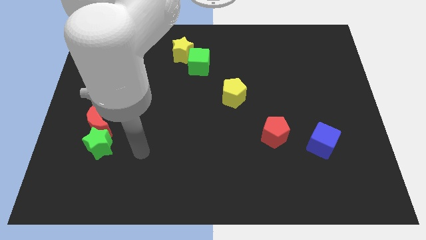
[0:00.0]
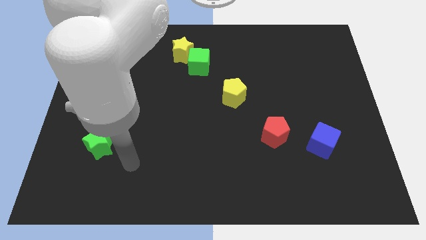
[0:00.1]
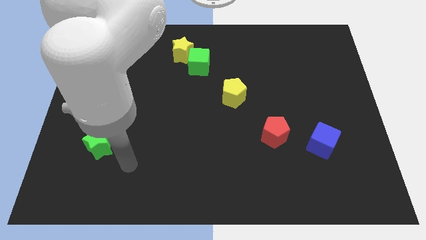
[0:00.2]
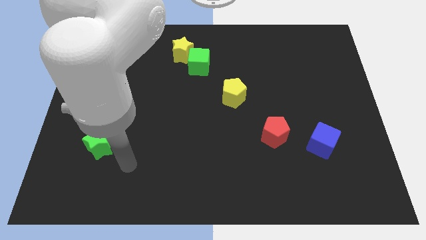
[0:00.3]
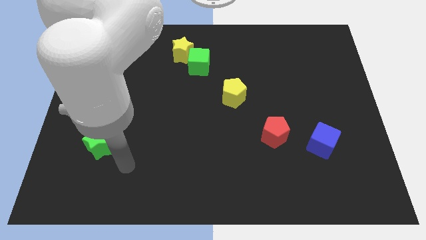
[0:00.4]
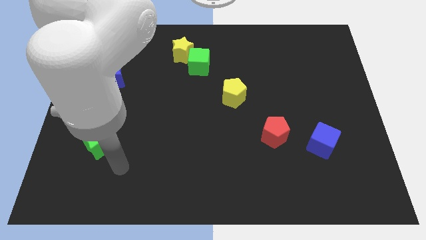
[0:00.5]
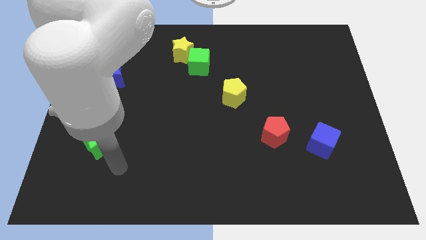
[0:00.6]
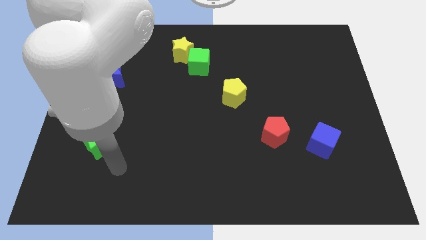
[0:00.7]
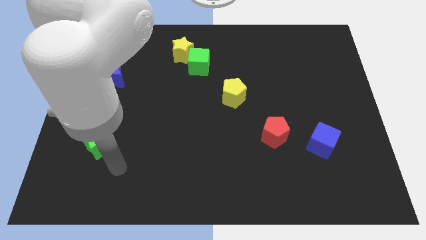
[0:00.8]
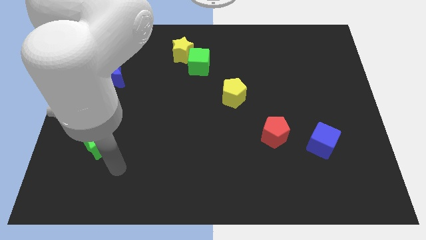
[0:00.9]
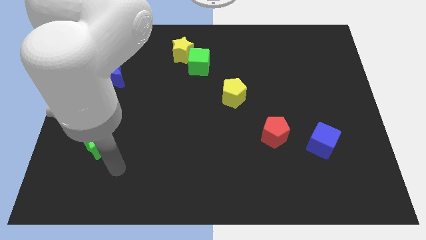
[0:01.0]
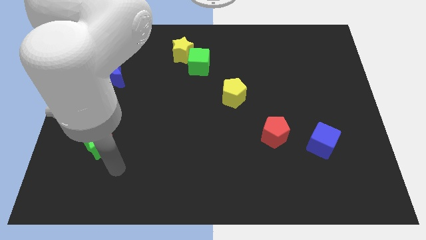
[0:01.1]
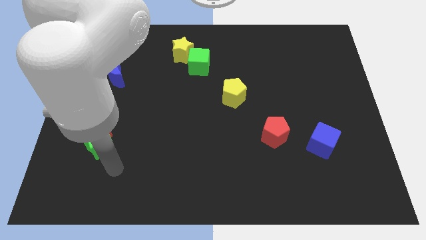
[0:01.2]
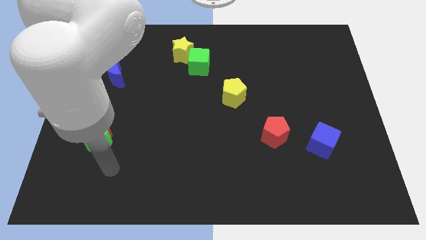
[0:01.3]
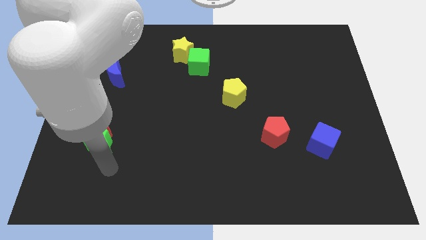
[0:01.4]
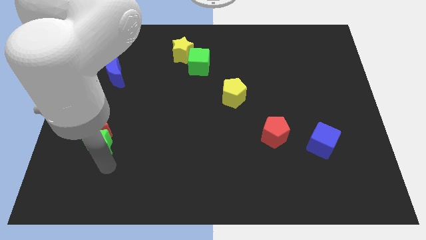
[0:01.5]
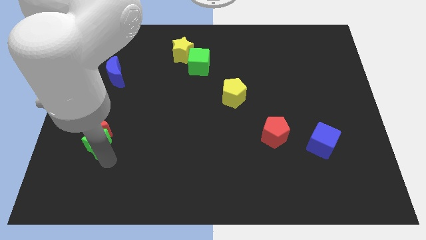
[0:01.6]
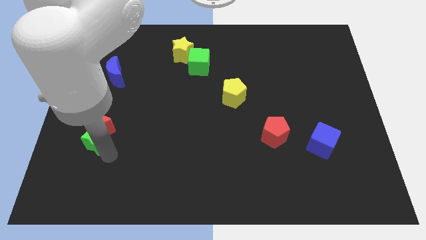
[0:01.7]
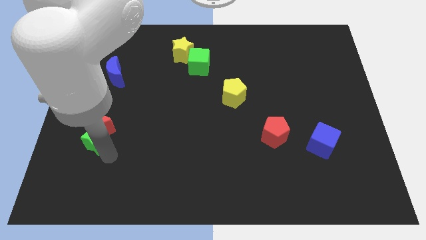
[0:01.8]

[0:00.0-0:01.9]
slightly push the green into the red crescent

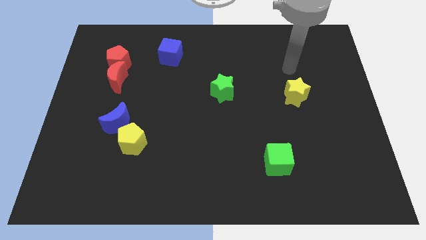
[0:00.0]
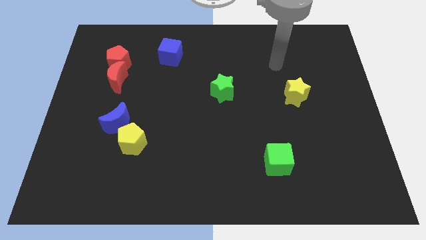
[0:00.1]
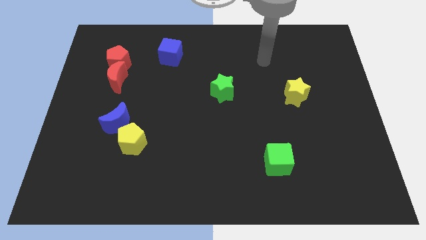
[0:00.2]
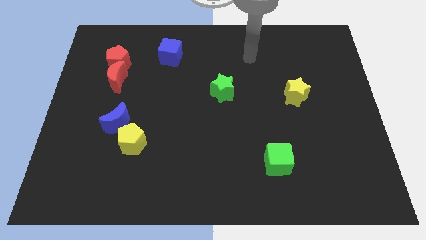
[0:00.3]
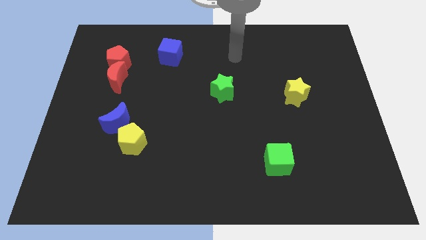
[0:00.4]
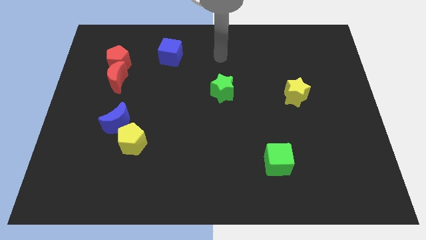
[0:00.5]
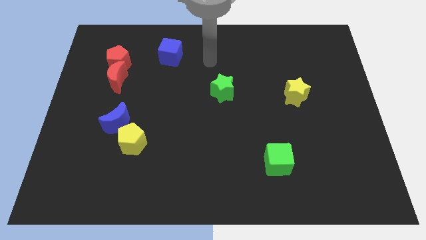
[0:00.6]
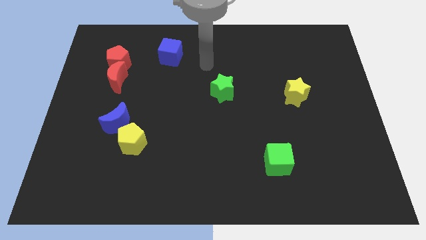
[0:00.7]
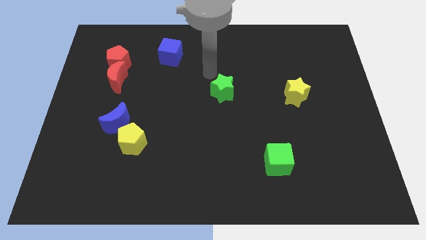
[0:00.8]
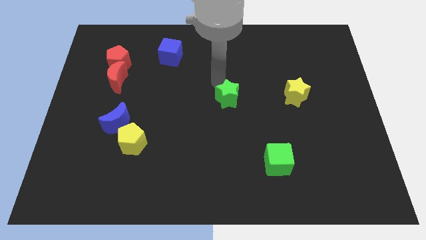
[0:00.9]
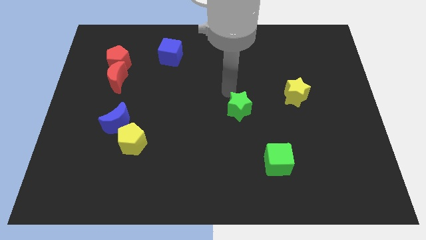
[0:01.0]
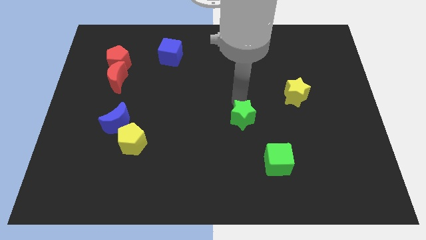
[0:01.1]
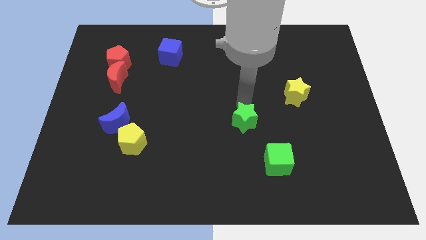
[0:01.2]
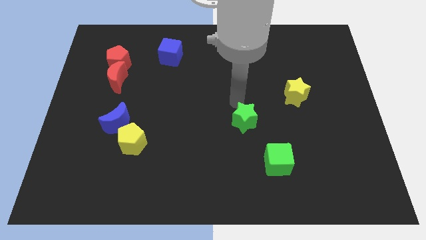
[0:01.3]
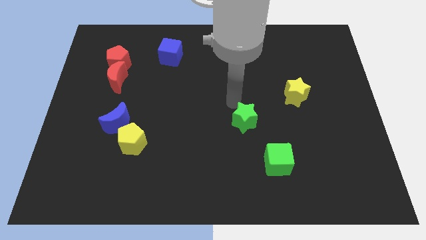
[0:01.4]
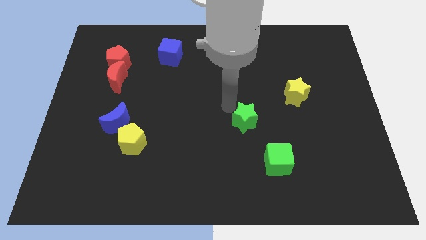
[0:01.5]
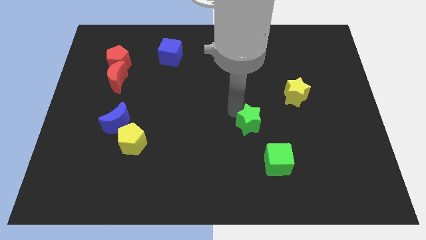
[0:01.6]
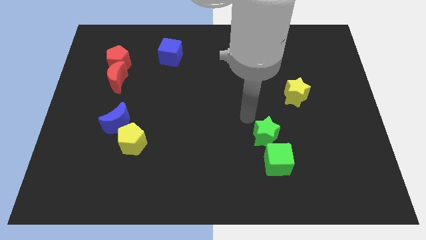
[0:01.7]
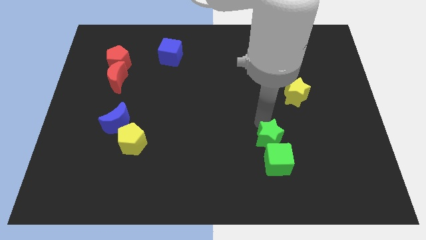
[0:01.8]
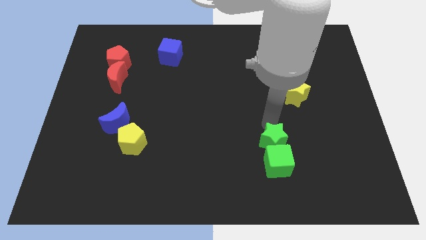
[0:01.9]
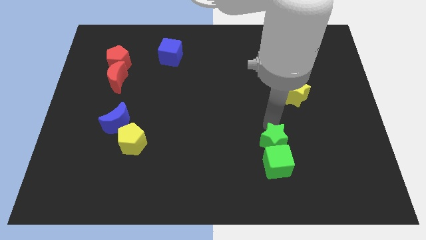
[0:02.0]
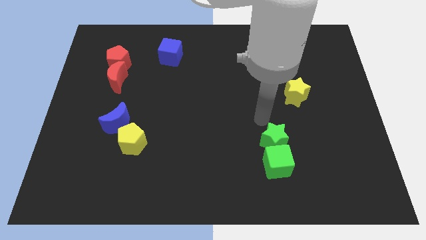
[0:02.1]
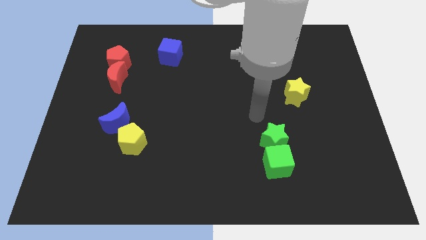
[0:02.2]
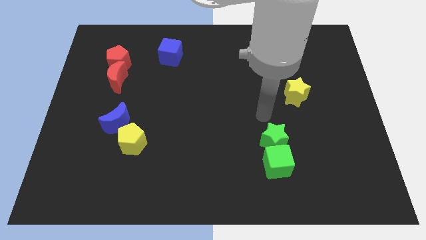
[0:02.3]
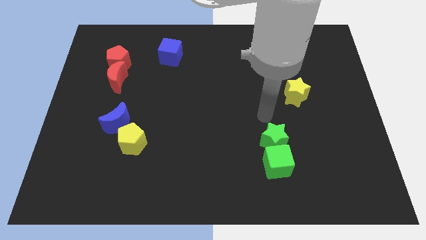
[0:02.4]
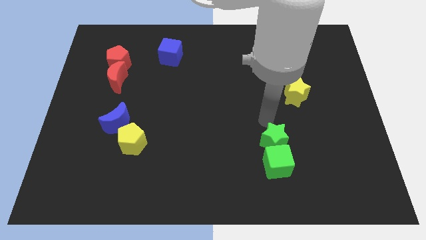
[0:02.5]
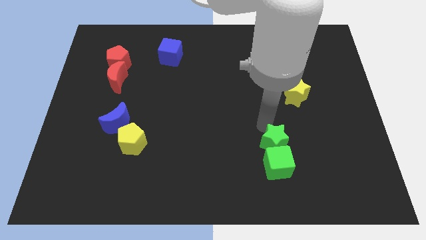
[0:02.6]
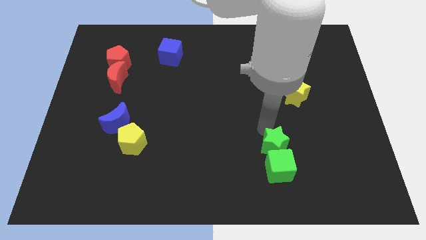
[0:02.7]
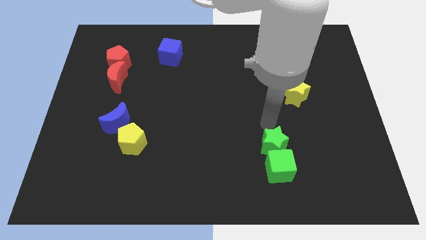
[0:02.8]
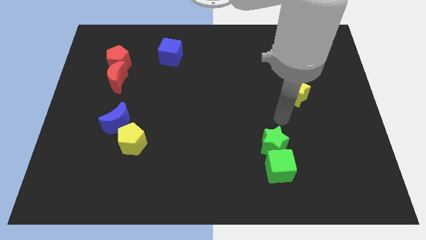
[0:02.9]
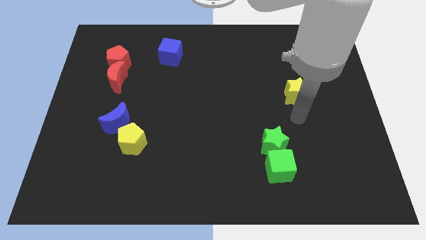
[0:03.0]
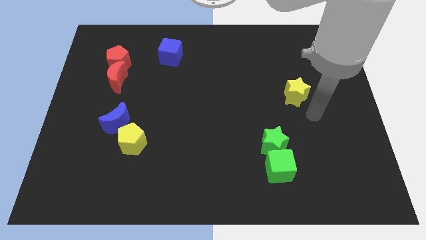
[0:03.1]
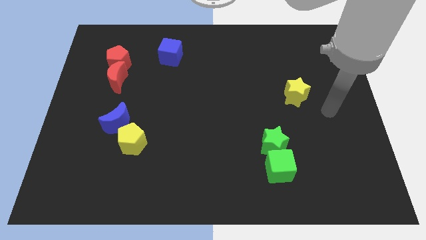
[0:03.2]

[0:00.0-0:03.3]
push the green star into the green cube

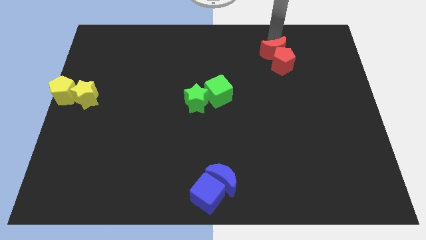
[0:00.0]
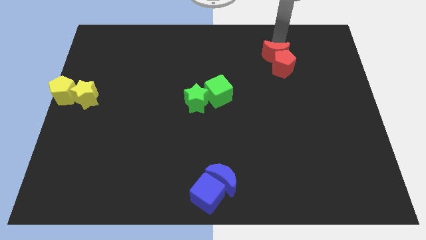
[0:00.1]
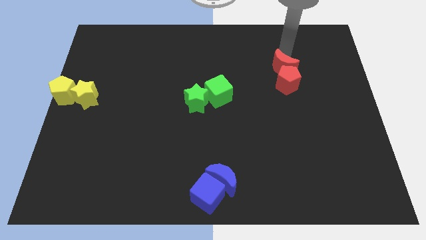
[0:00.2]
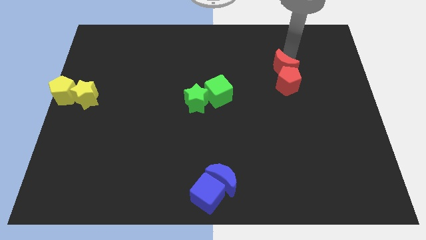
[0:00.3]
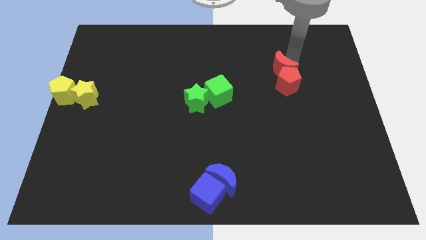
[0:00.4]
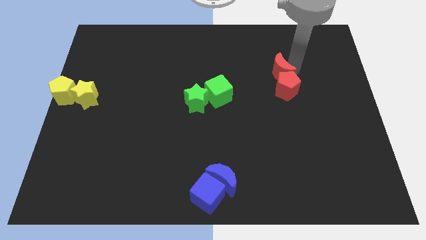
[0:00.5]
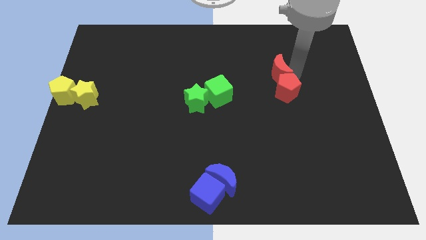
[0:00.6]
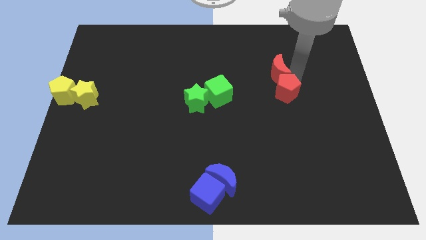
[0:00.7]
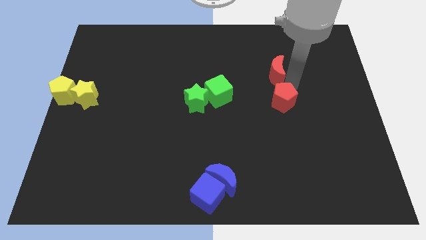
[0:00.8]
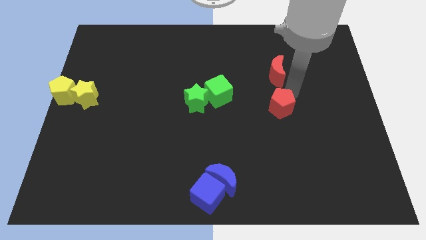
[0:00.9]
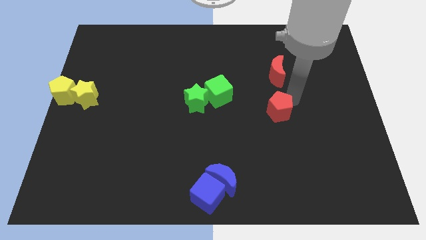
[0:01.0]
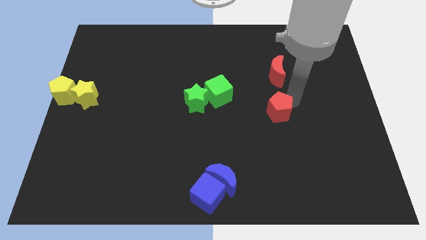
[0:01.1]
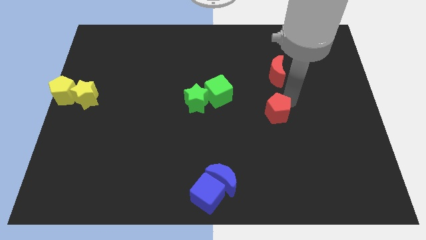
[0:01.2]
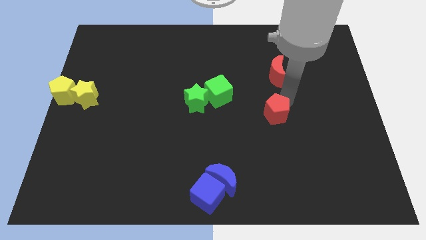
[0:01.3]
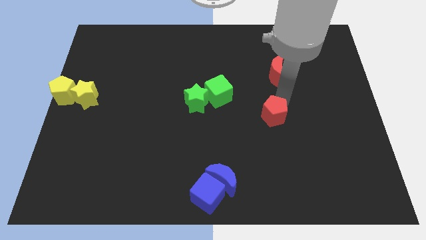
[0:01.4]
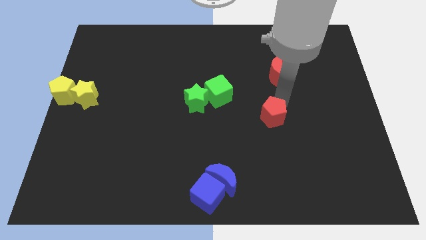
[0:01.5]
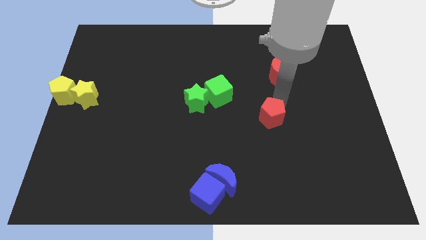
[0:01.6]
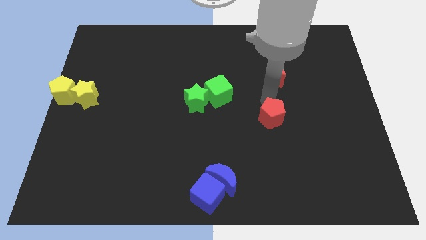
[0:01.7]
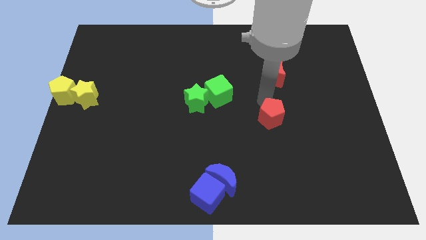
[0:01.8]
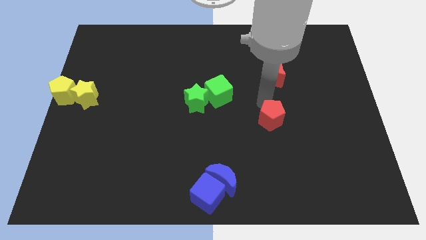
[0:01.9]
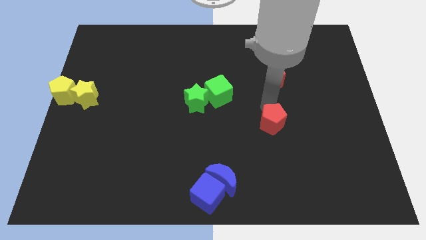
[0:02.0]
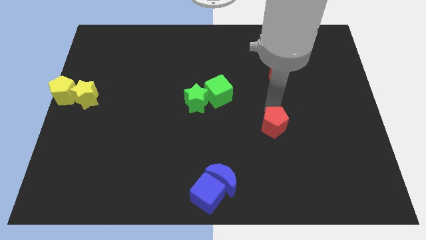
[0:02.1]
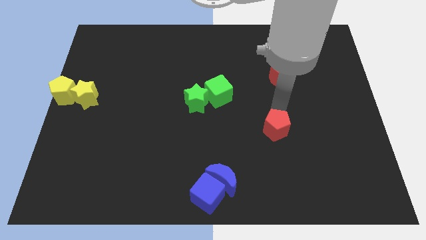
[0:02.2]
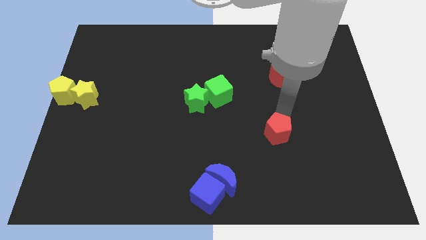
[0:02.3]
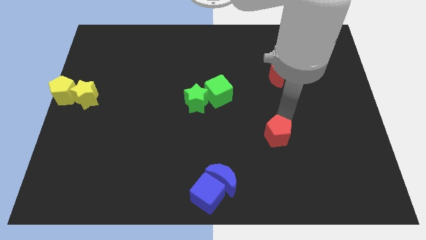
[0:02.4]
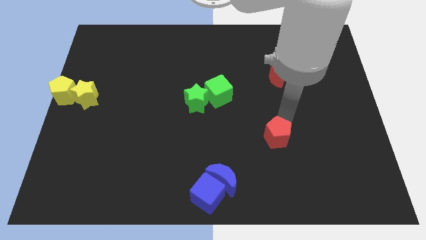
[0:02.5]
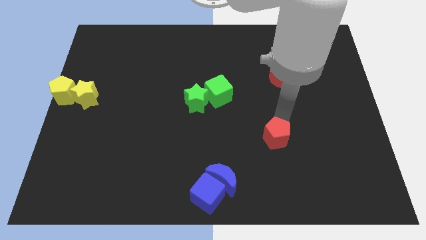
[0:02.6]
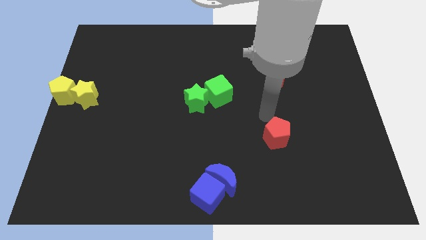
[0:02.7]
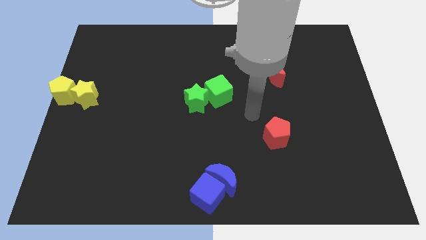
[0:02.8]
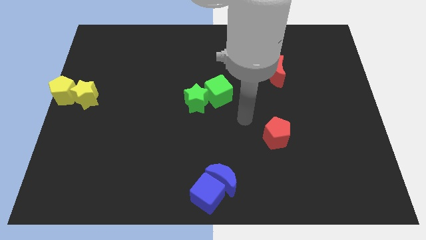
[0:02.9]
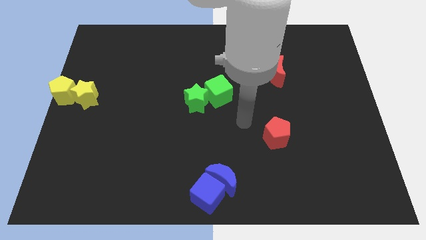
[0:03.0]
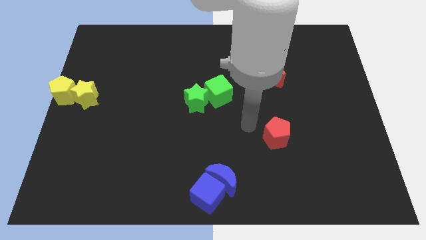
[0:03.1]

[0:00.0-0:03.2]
separate the red pentagon towards the bottom side

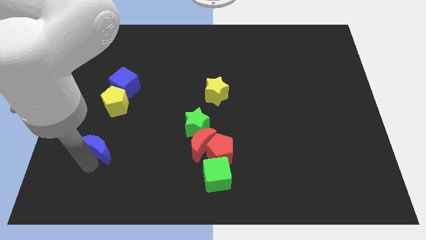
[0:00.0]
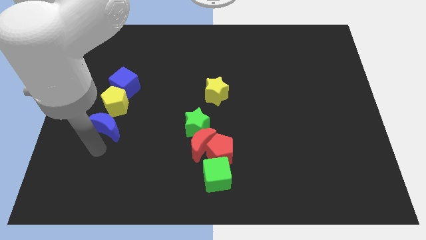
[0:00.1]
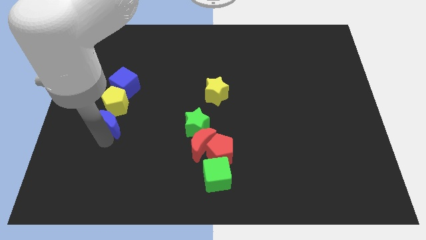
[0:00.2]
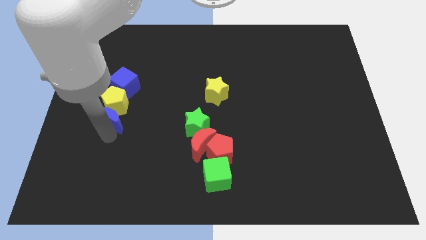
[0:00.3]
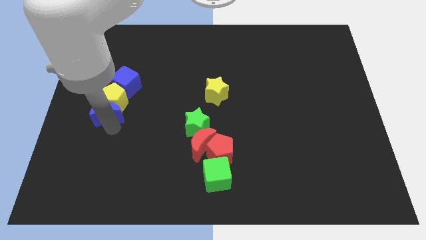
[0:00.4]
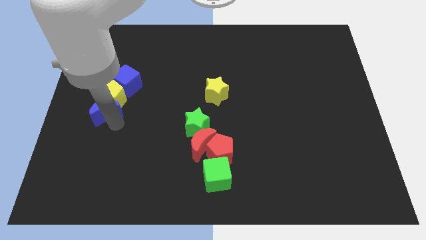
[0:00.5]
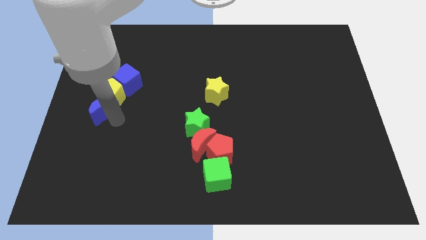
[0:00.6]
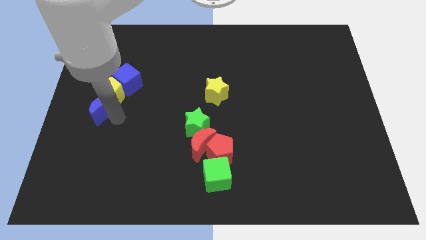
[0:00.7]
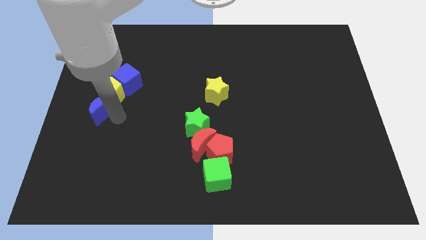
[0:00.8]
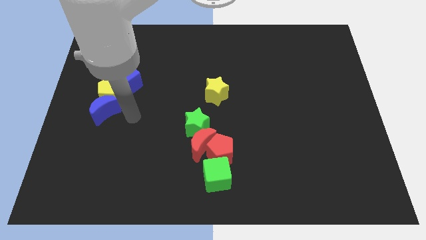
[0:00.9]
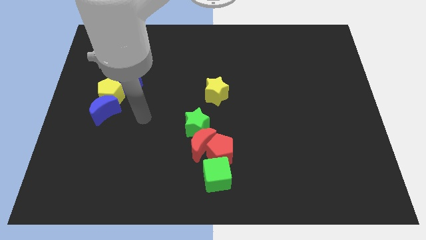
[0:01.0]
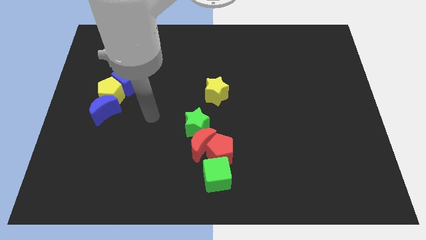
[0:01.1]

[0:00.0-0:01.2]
move the blue moon to the bottom side of the yellow pentagon
